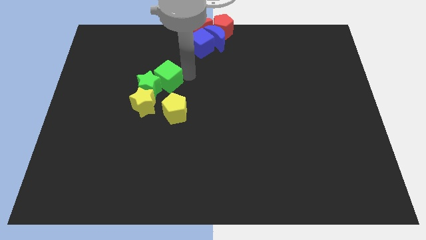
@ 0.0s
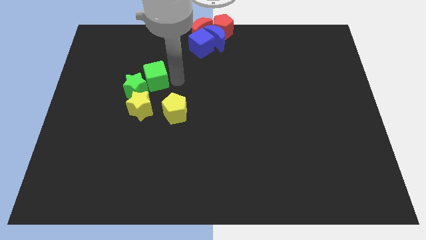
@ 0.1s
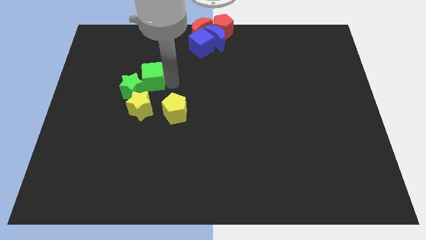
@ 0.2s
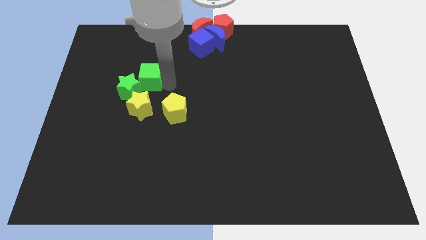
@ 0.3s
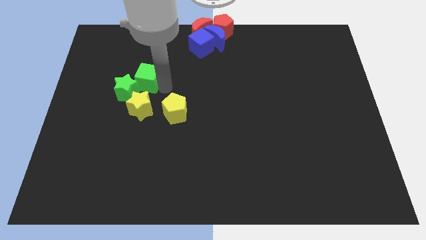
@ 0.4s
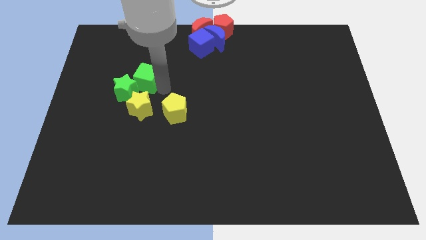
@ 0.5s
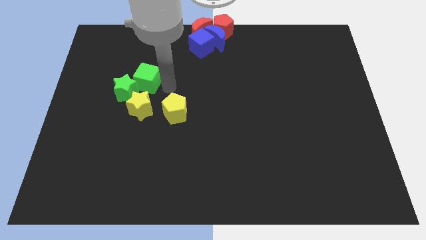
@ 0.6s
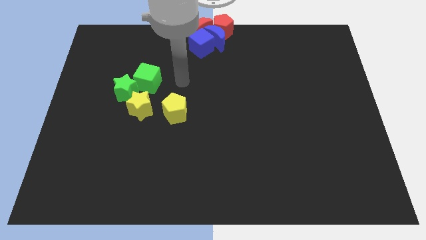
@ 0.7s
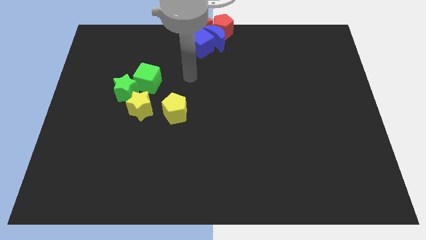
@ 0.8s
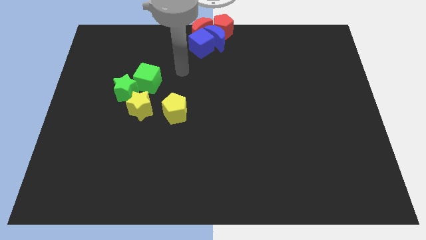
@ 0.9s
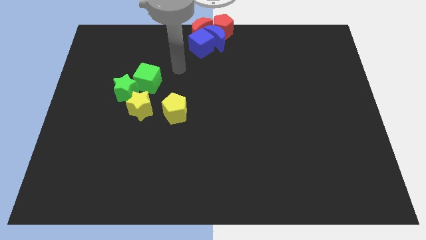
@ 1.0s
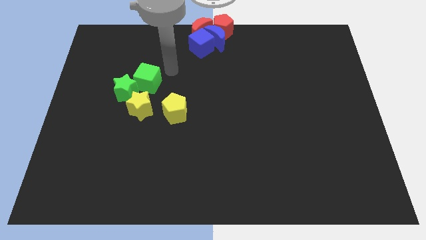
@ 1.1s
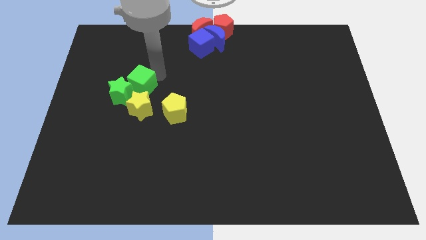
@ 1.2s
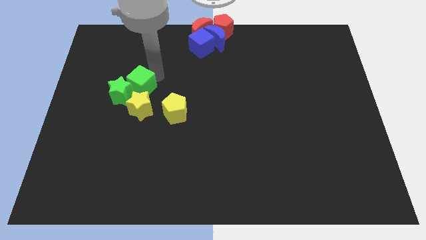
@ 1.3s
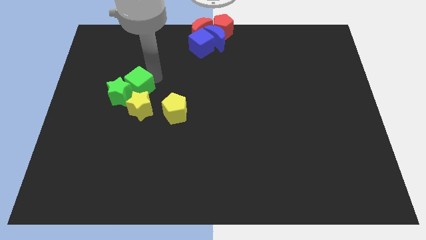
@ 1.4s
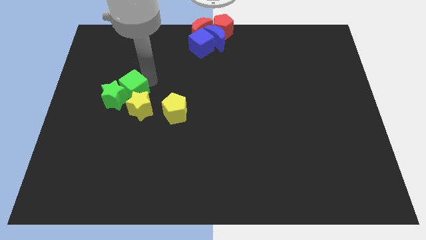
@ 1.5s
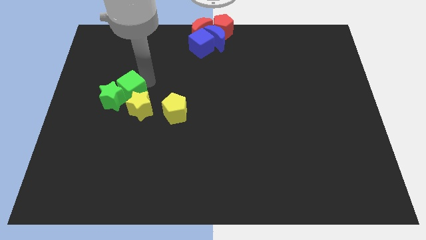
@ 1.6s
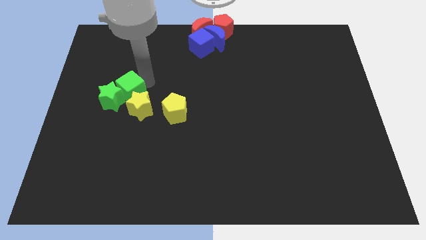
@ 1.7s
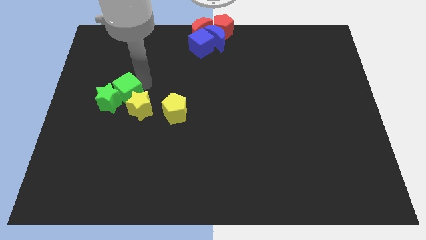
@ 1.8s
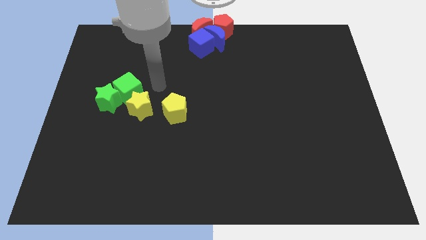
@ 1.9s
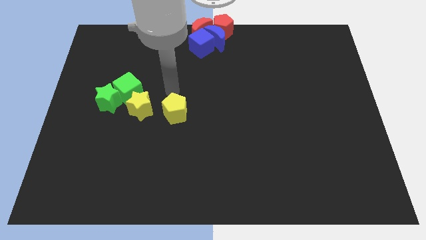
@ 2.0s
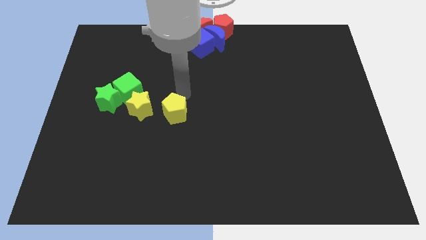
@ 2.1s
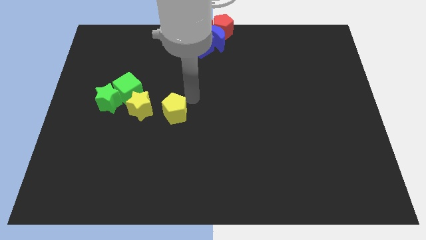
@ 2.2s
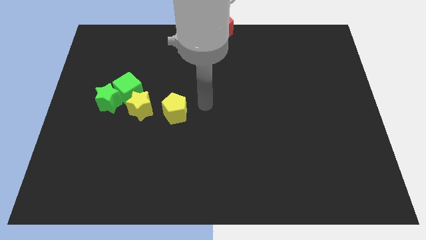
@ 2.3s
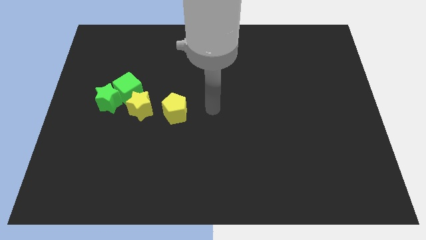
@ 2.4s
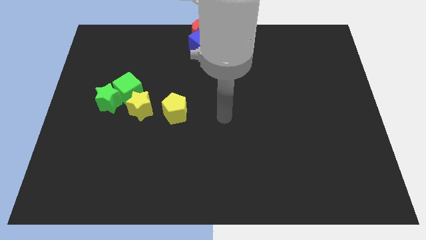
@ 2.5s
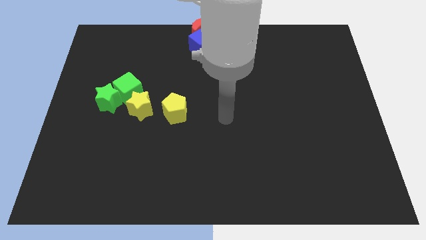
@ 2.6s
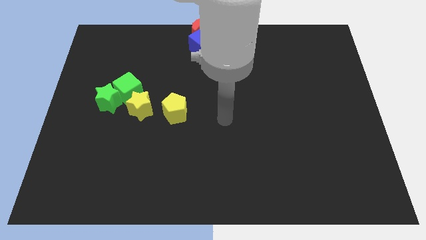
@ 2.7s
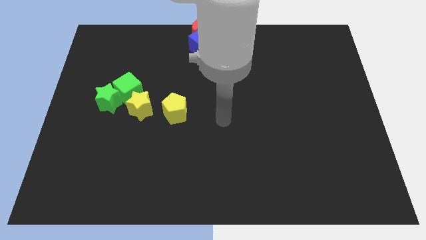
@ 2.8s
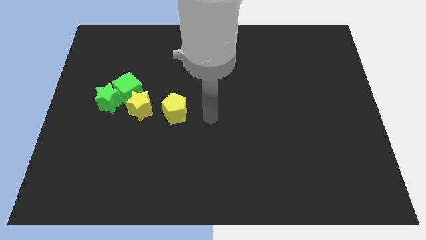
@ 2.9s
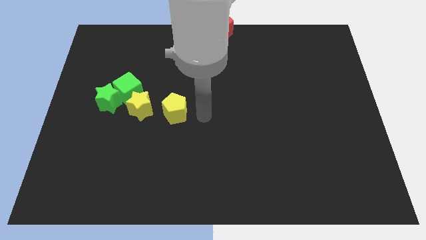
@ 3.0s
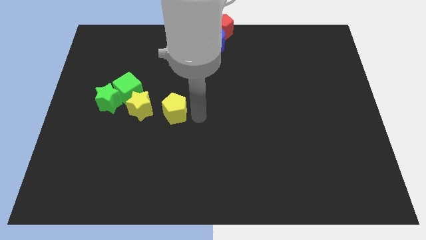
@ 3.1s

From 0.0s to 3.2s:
move your arm to the right of the yellow pentagon

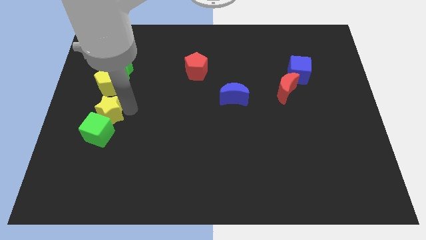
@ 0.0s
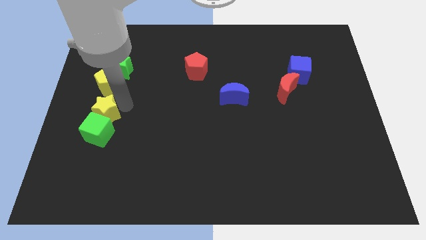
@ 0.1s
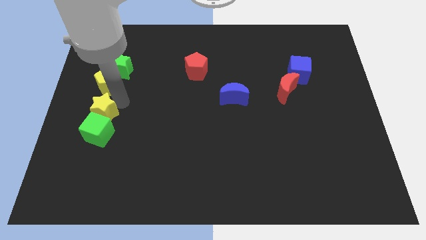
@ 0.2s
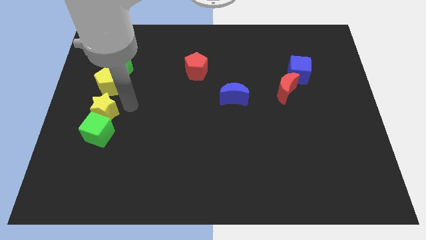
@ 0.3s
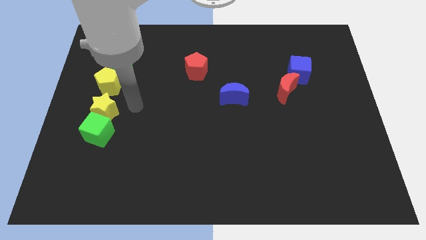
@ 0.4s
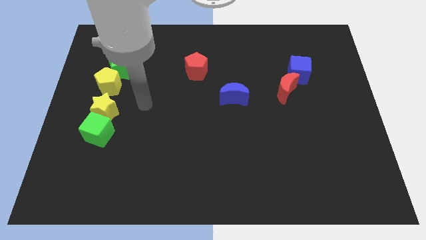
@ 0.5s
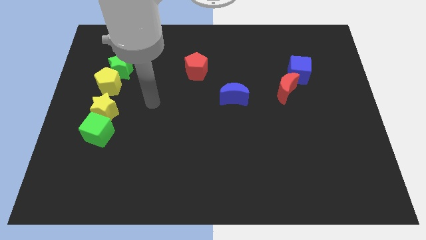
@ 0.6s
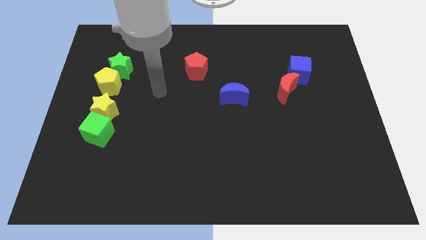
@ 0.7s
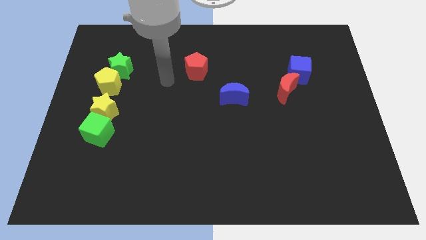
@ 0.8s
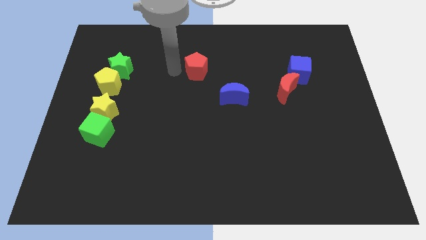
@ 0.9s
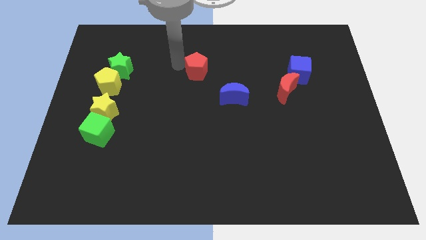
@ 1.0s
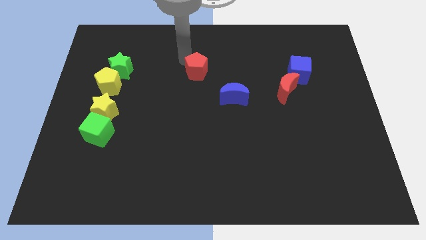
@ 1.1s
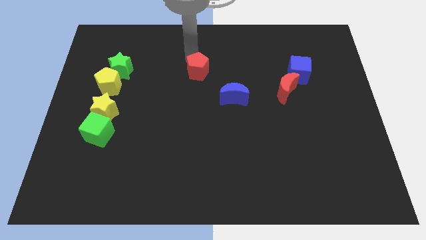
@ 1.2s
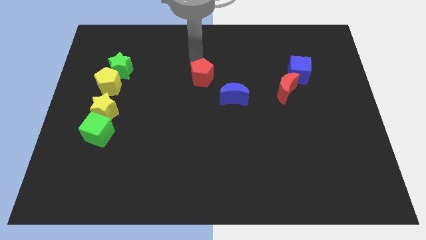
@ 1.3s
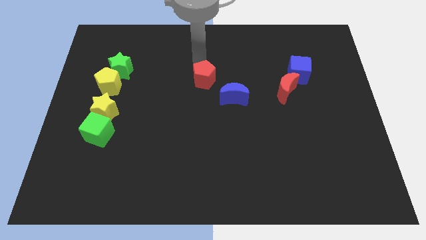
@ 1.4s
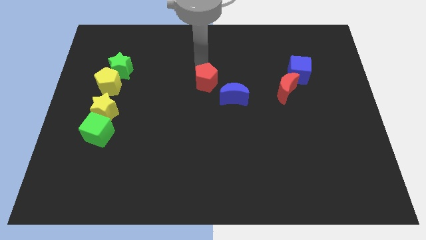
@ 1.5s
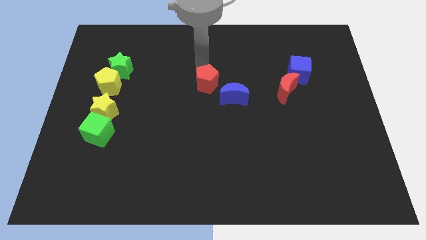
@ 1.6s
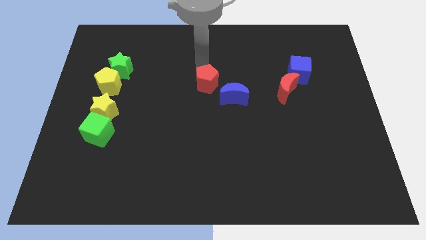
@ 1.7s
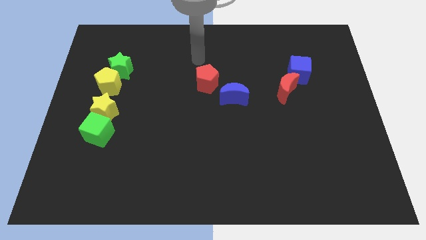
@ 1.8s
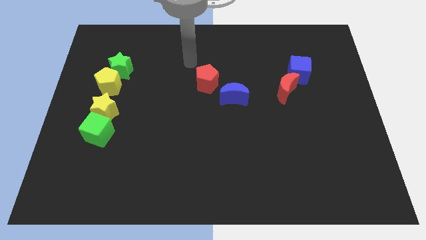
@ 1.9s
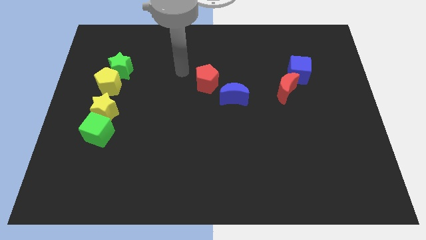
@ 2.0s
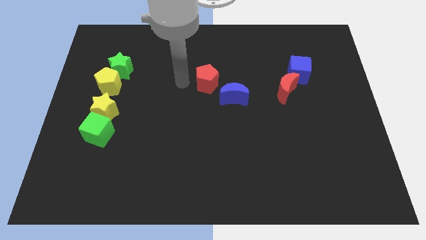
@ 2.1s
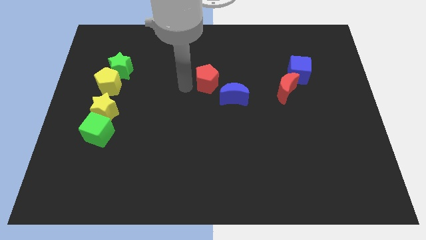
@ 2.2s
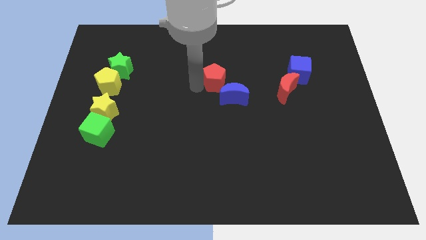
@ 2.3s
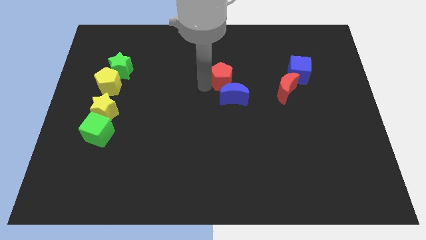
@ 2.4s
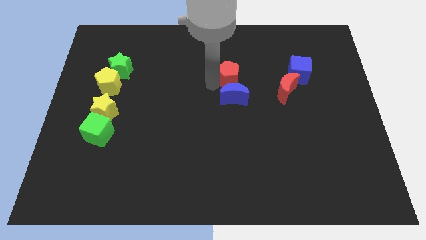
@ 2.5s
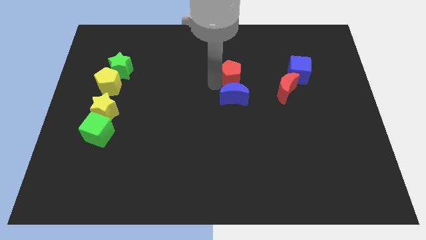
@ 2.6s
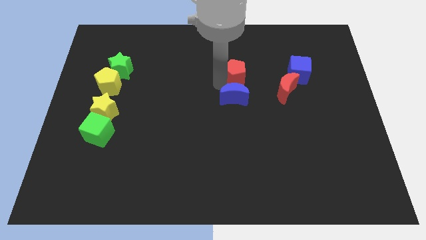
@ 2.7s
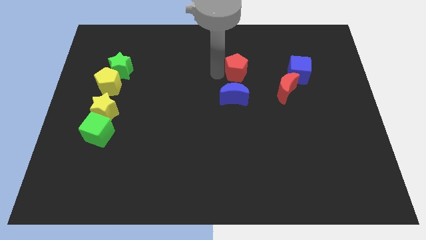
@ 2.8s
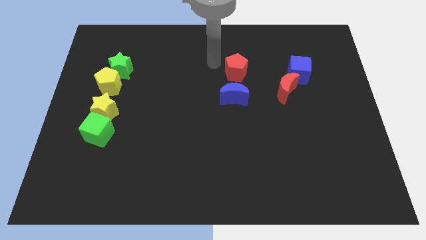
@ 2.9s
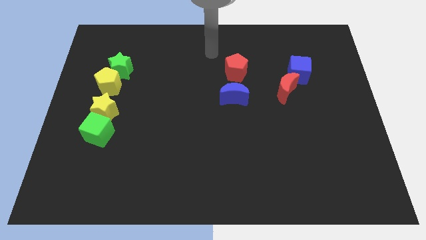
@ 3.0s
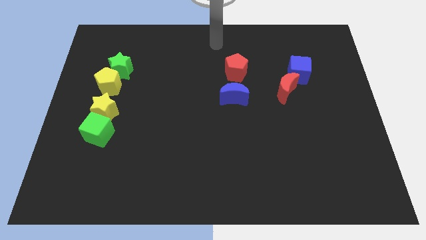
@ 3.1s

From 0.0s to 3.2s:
place the red pentagon above the blue moon

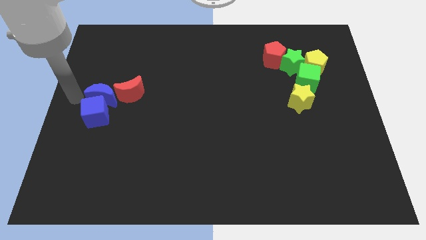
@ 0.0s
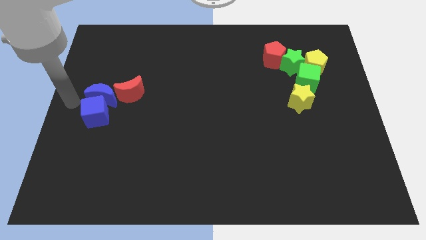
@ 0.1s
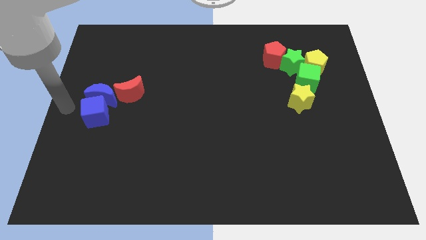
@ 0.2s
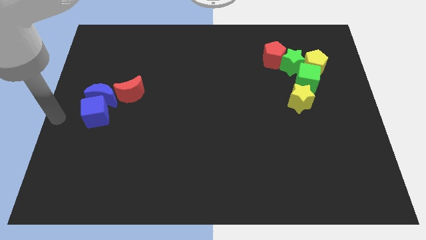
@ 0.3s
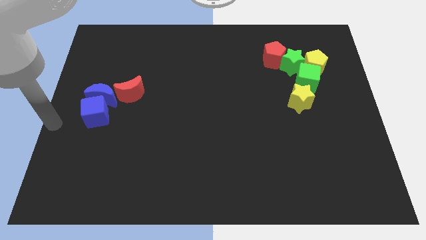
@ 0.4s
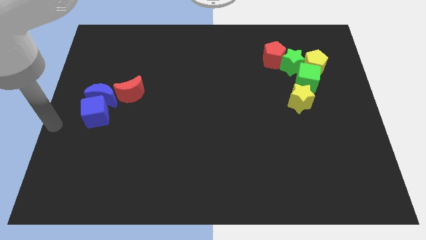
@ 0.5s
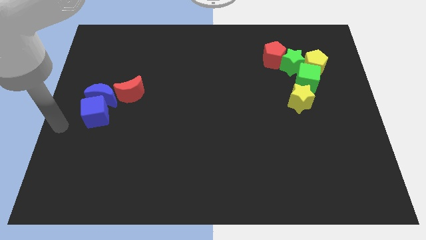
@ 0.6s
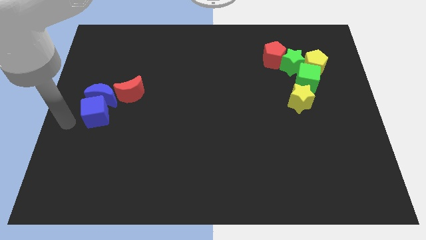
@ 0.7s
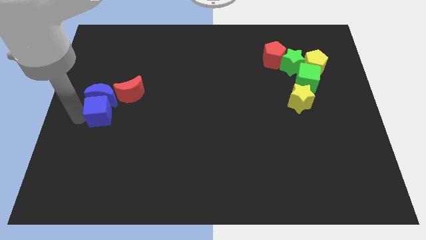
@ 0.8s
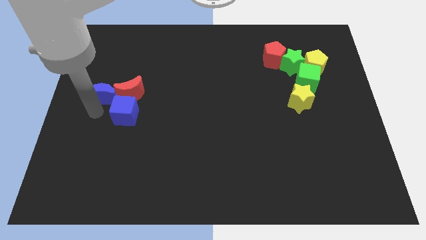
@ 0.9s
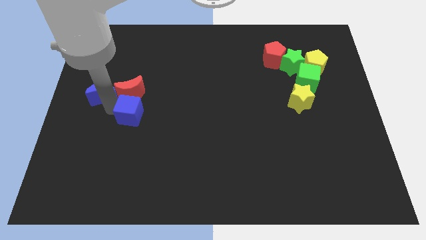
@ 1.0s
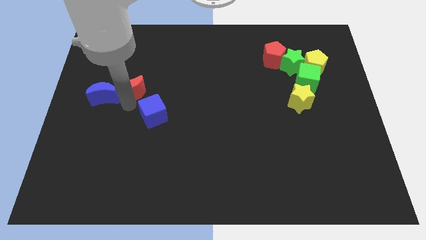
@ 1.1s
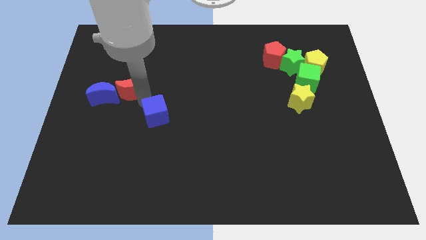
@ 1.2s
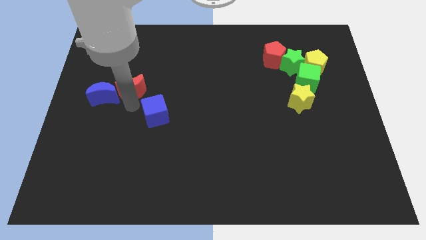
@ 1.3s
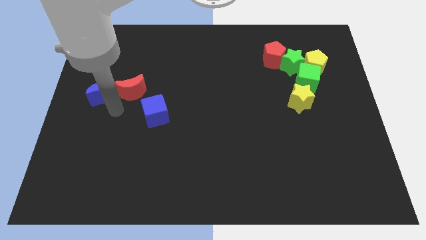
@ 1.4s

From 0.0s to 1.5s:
move the blue cube slightly to the right

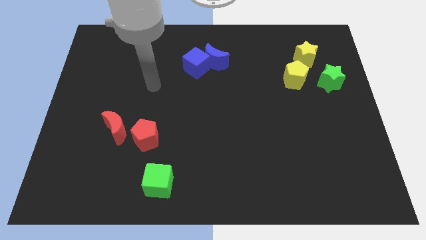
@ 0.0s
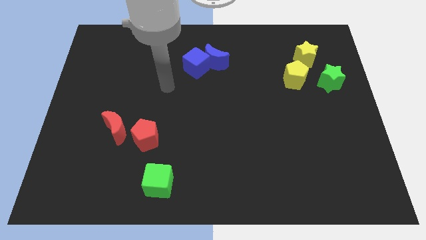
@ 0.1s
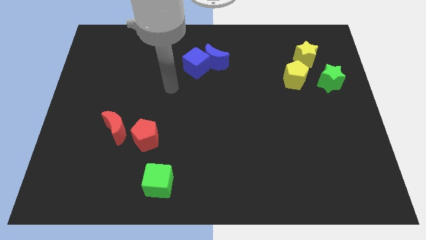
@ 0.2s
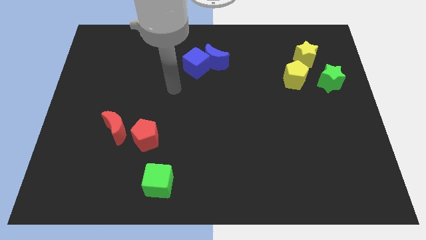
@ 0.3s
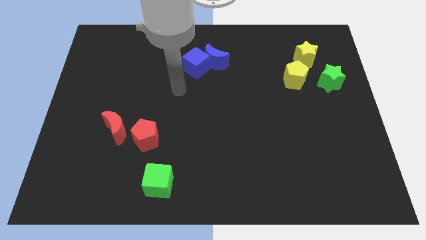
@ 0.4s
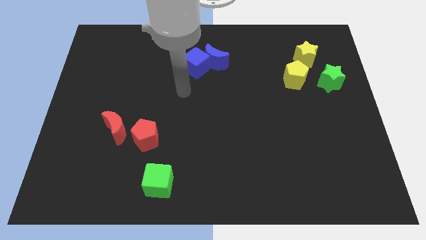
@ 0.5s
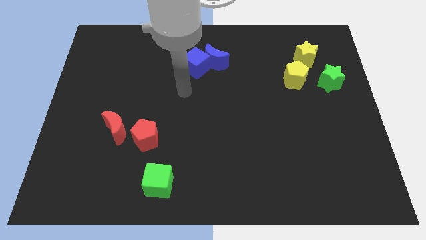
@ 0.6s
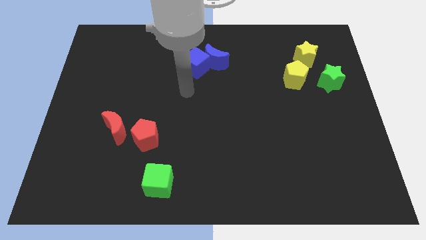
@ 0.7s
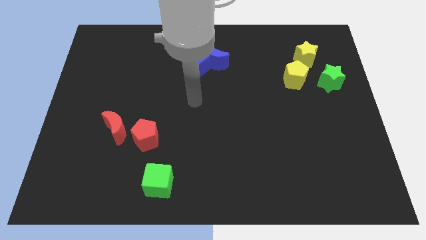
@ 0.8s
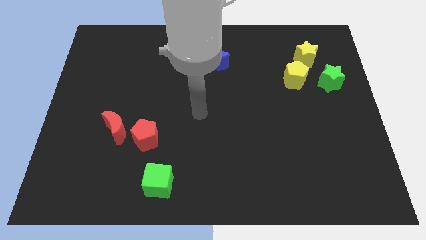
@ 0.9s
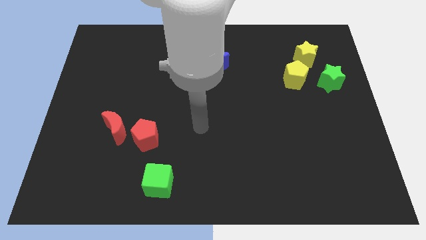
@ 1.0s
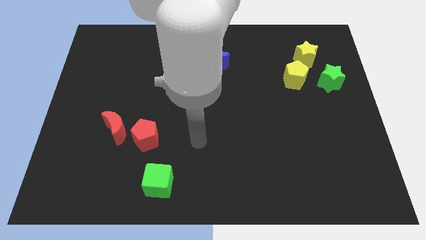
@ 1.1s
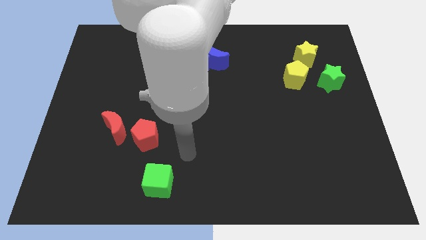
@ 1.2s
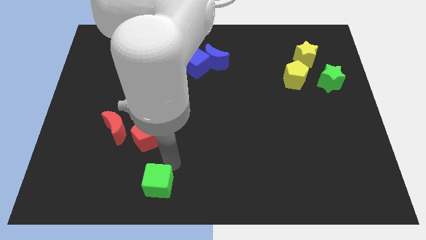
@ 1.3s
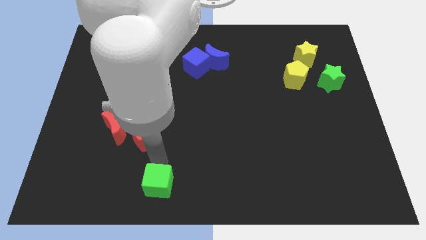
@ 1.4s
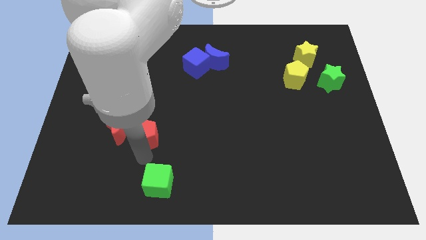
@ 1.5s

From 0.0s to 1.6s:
touch the top side of the green cube
